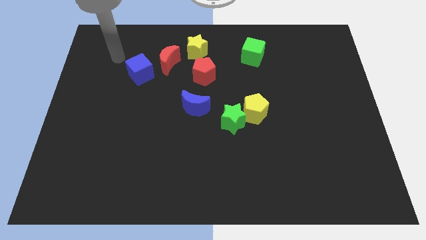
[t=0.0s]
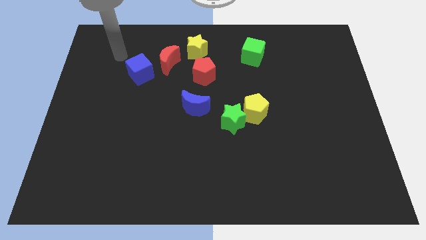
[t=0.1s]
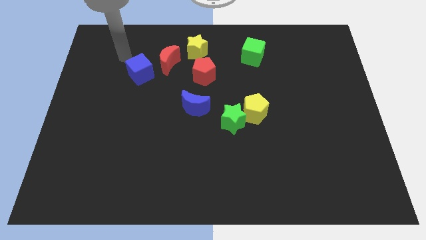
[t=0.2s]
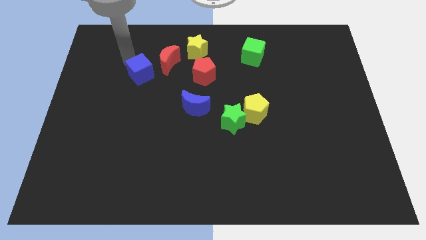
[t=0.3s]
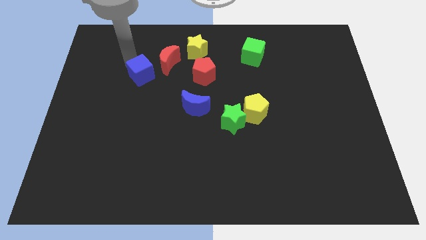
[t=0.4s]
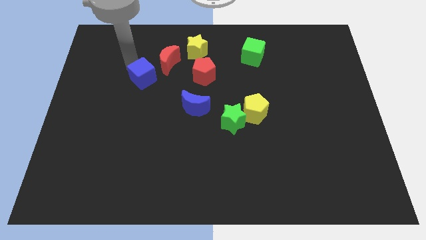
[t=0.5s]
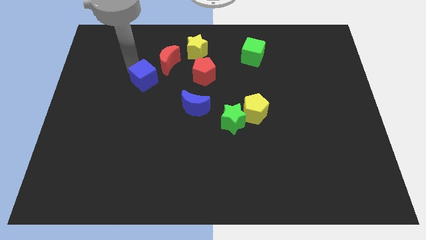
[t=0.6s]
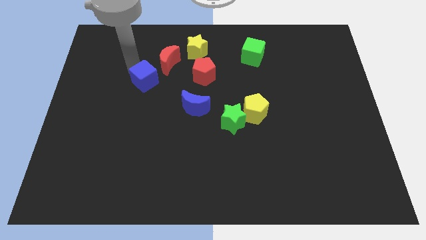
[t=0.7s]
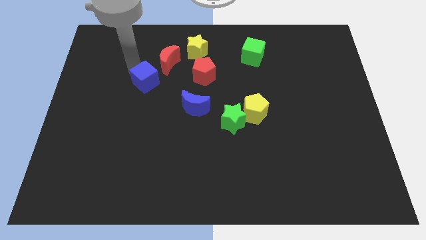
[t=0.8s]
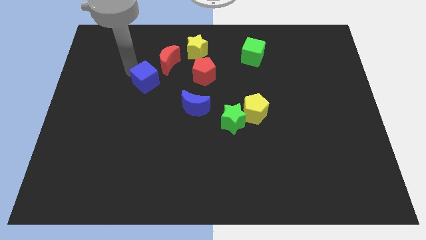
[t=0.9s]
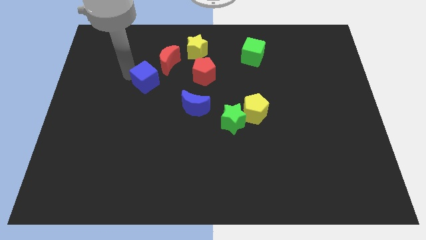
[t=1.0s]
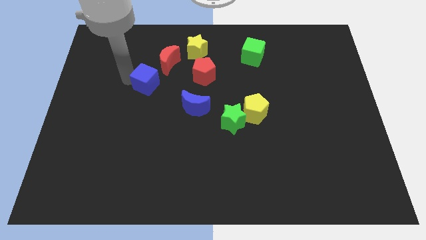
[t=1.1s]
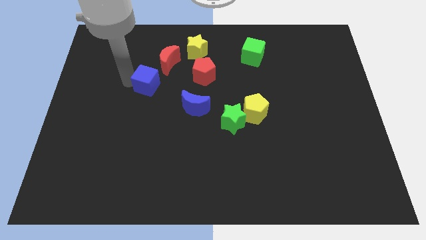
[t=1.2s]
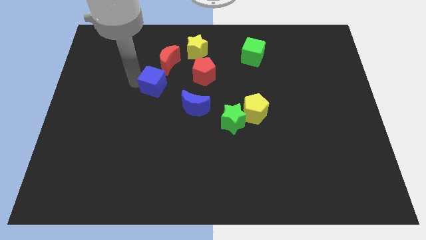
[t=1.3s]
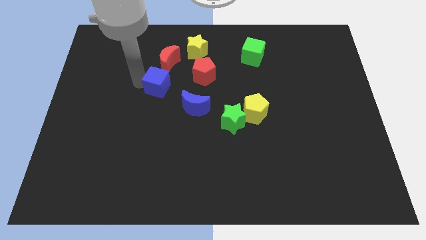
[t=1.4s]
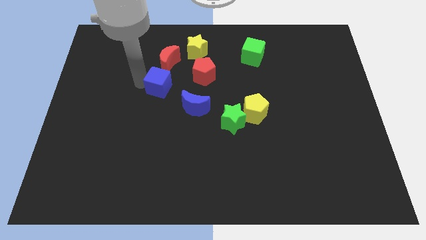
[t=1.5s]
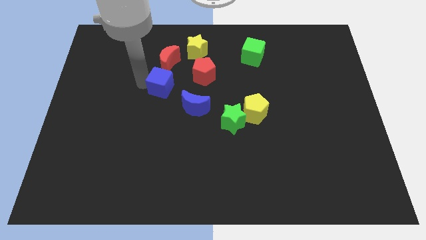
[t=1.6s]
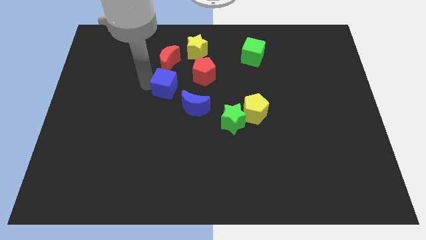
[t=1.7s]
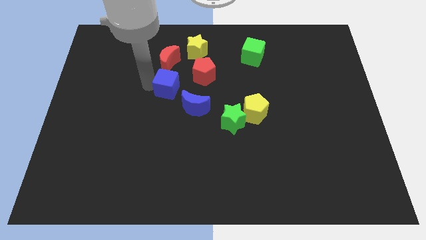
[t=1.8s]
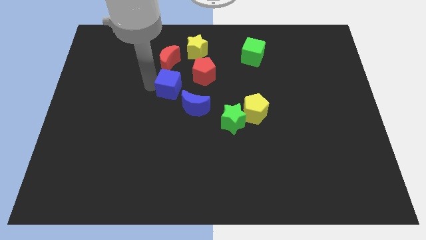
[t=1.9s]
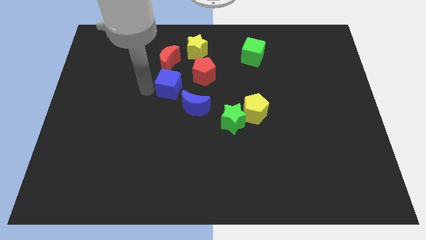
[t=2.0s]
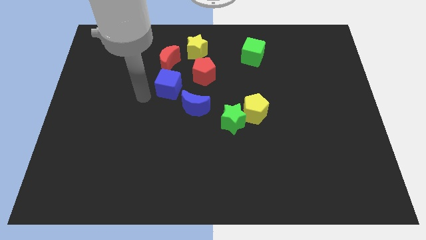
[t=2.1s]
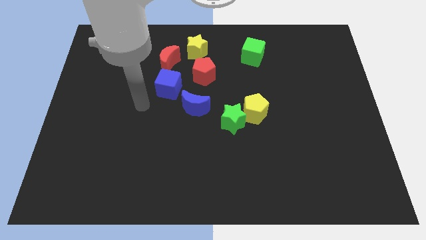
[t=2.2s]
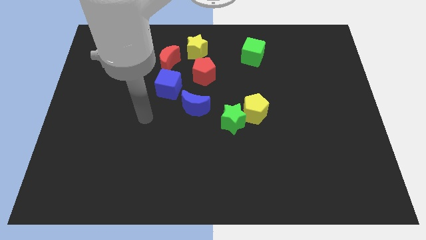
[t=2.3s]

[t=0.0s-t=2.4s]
place the blue cube below the red crescent

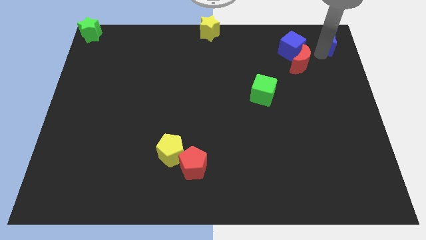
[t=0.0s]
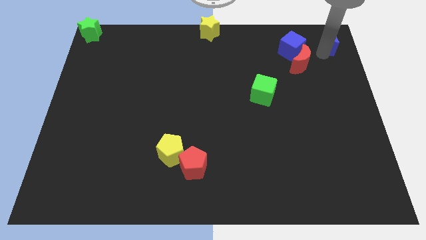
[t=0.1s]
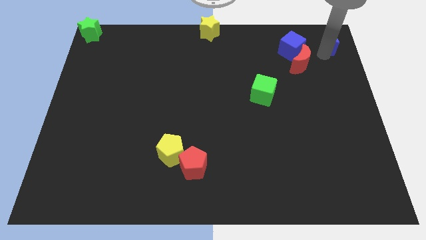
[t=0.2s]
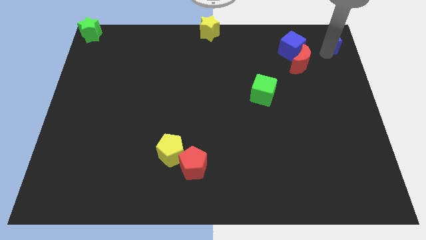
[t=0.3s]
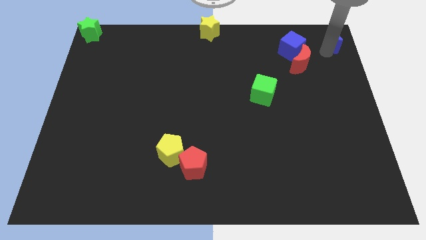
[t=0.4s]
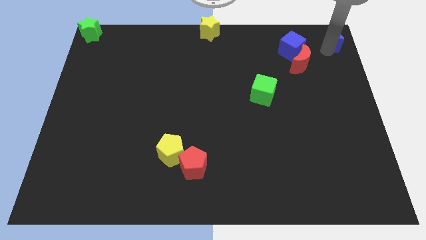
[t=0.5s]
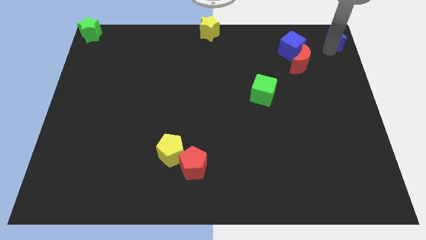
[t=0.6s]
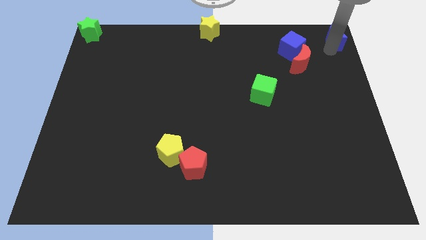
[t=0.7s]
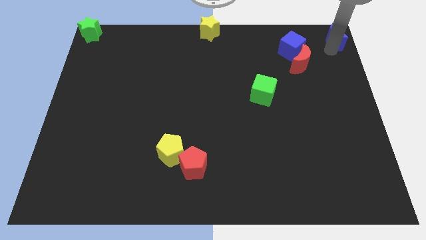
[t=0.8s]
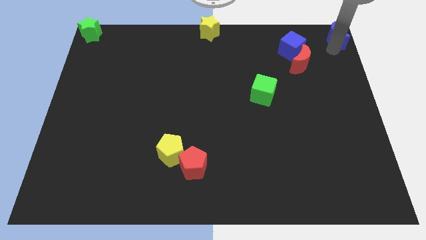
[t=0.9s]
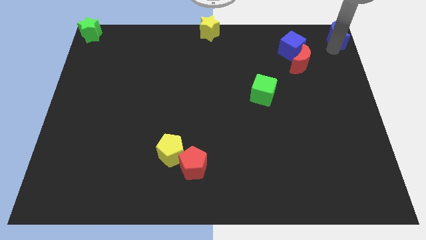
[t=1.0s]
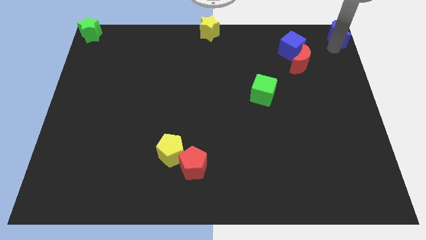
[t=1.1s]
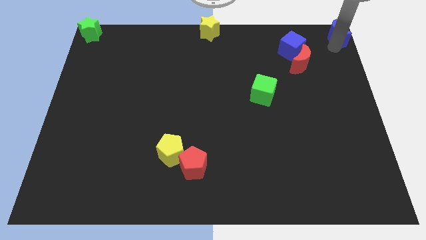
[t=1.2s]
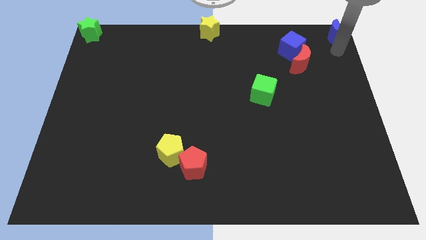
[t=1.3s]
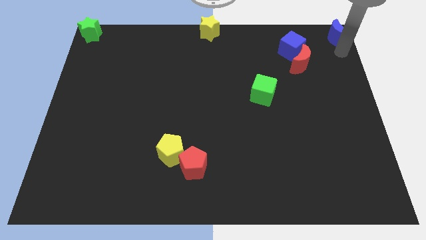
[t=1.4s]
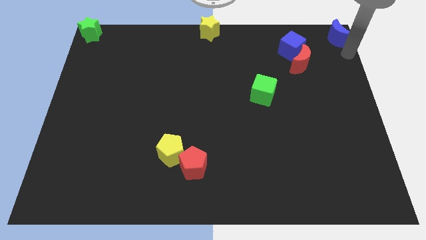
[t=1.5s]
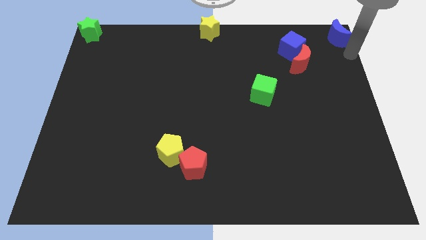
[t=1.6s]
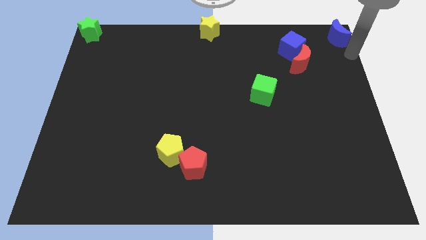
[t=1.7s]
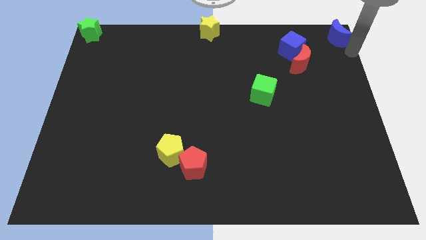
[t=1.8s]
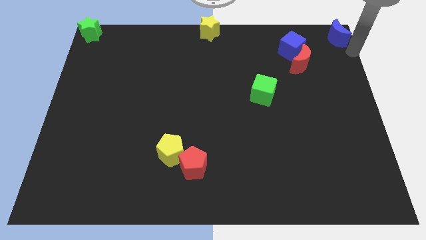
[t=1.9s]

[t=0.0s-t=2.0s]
move blue crescent at the top right corner

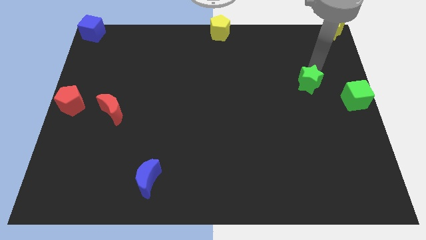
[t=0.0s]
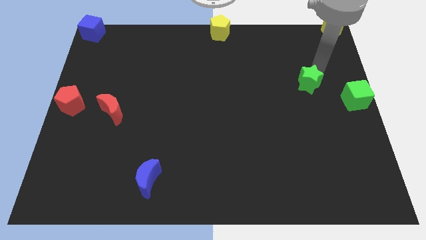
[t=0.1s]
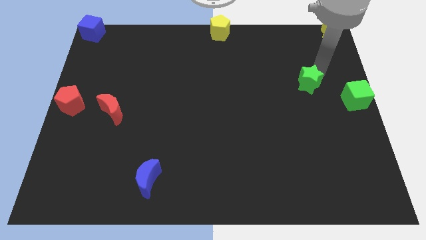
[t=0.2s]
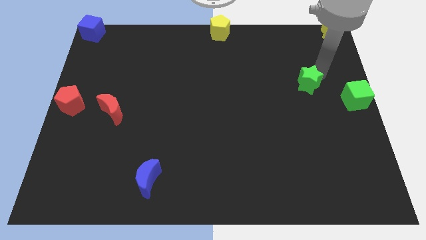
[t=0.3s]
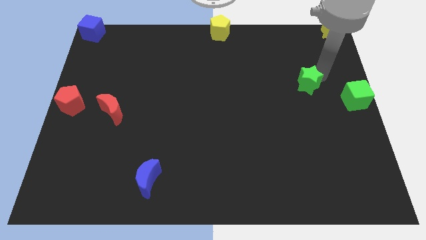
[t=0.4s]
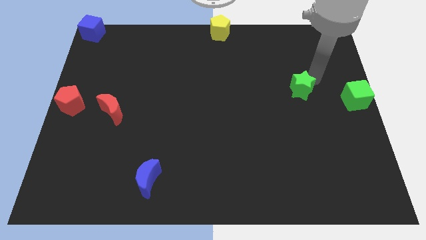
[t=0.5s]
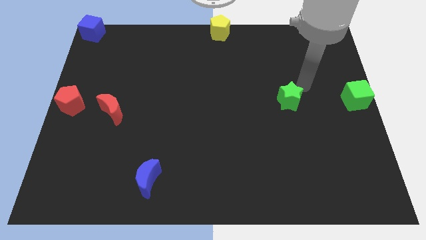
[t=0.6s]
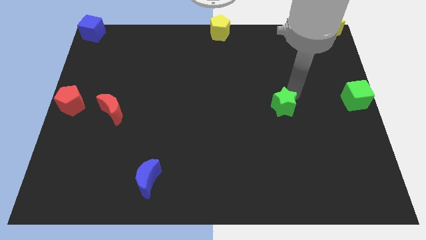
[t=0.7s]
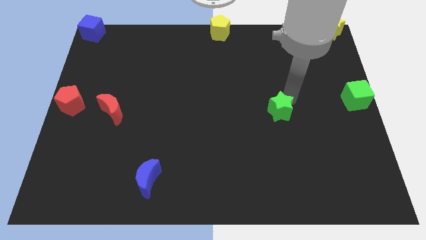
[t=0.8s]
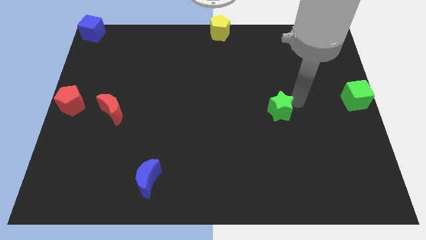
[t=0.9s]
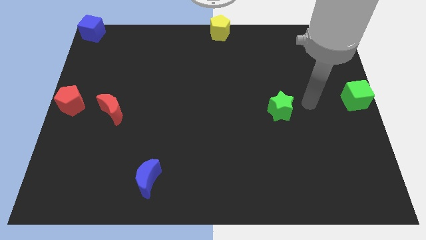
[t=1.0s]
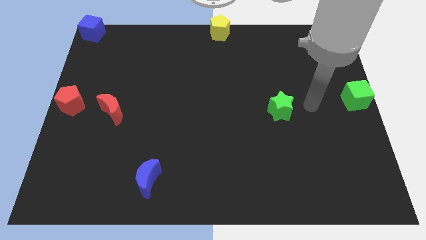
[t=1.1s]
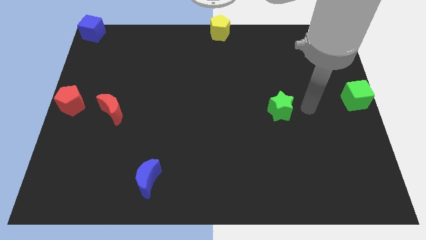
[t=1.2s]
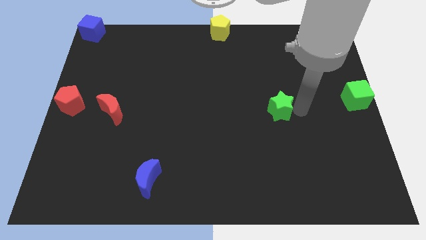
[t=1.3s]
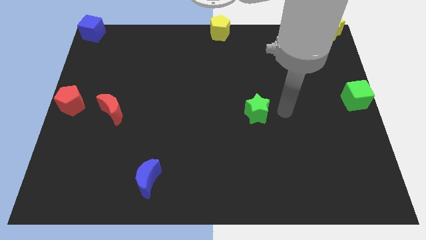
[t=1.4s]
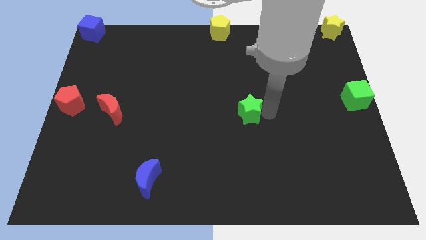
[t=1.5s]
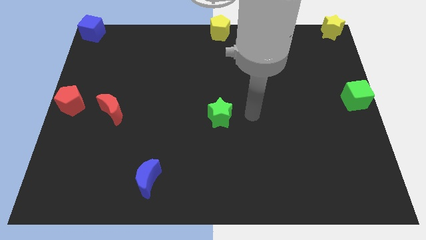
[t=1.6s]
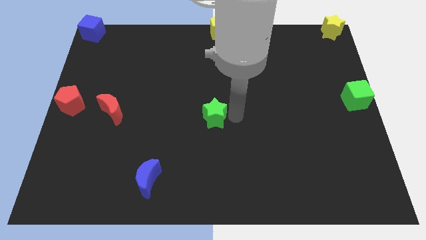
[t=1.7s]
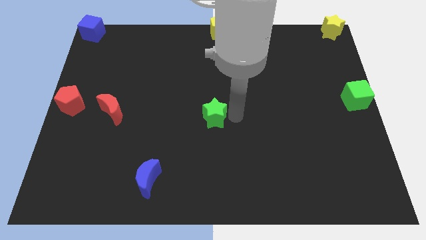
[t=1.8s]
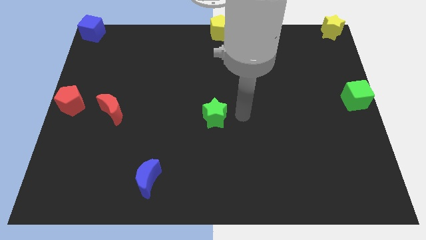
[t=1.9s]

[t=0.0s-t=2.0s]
place the green star at the center of the board

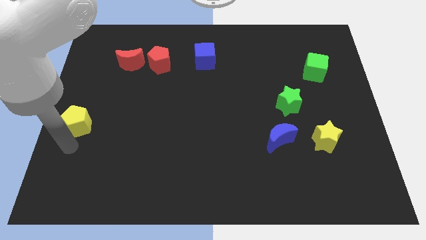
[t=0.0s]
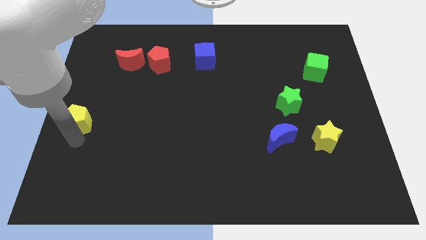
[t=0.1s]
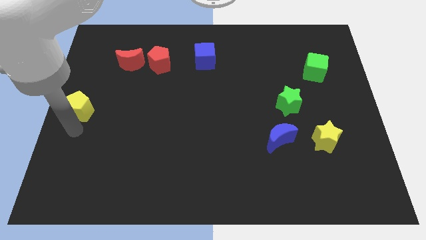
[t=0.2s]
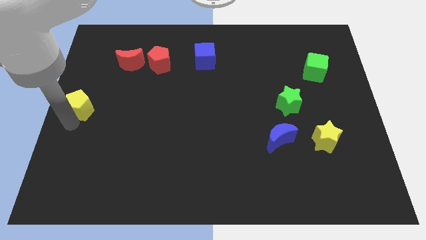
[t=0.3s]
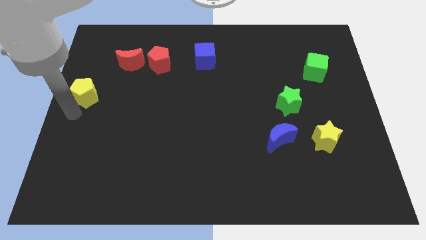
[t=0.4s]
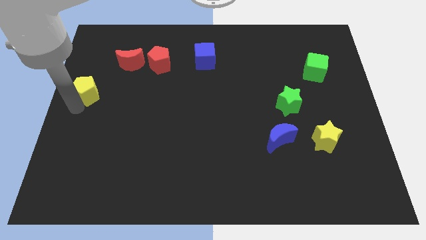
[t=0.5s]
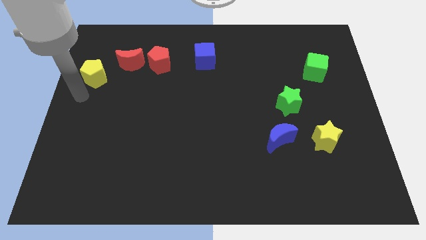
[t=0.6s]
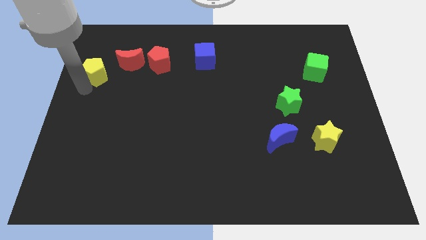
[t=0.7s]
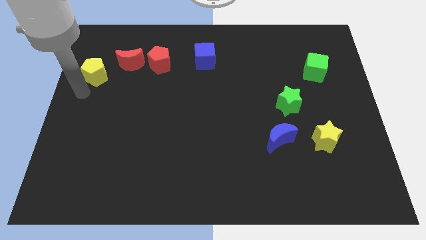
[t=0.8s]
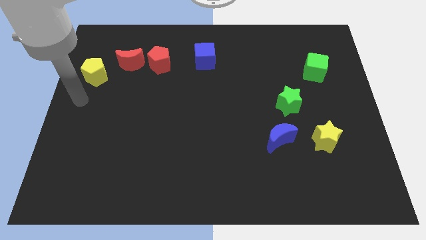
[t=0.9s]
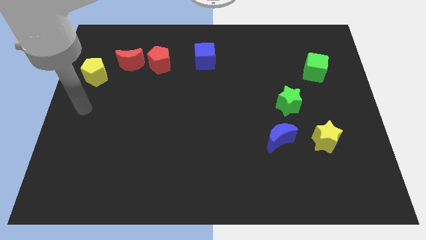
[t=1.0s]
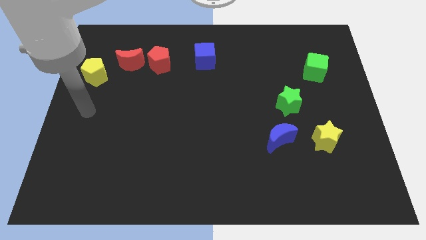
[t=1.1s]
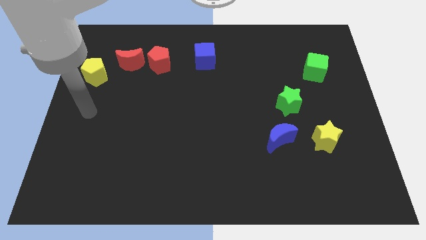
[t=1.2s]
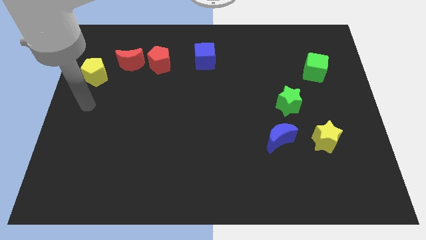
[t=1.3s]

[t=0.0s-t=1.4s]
slightly move the yellow pentagon towards the top

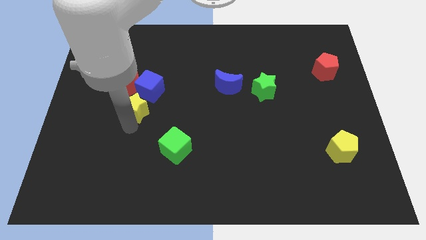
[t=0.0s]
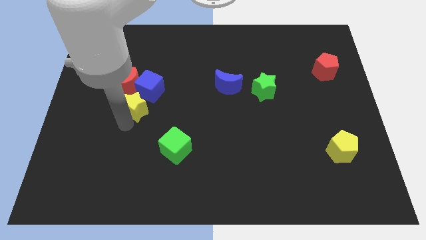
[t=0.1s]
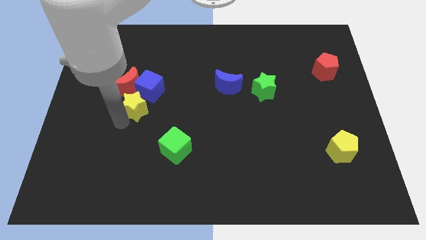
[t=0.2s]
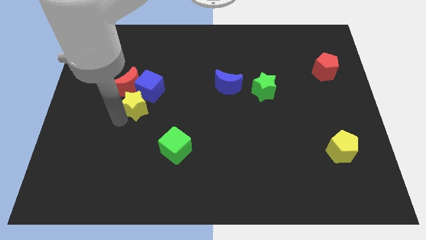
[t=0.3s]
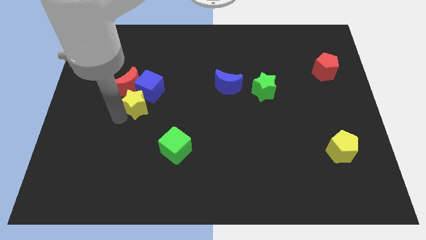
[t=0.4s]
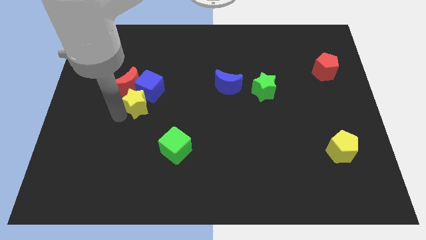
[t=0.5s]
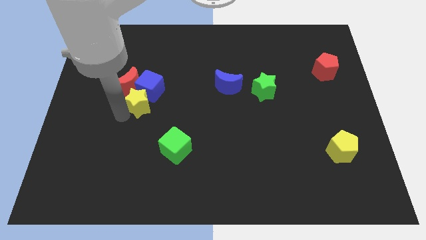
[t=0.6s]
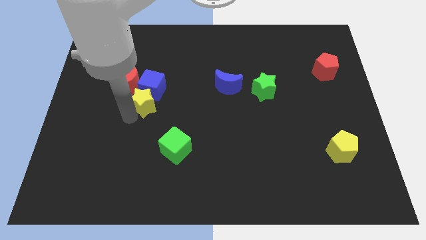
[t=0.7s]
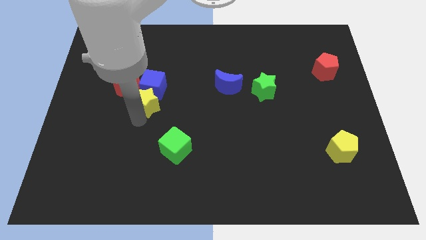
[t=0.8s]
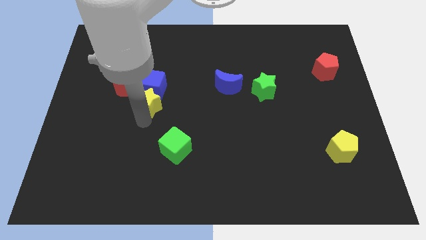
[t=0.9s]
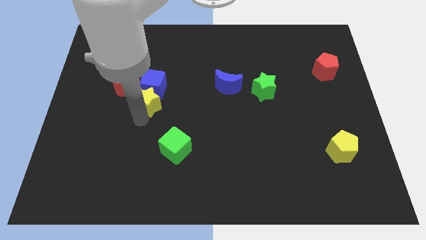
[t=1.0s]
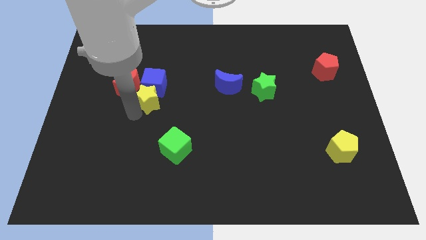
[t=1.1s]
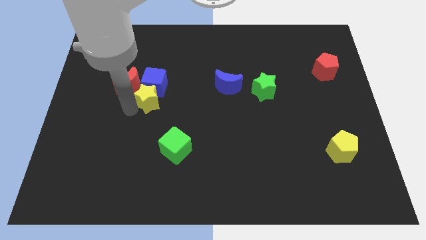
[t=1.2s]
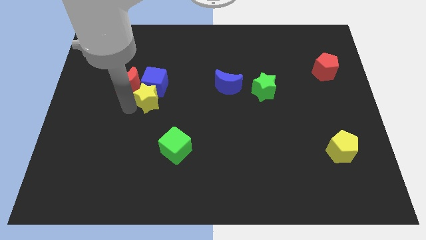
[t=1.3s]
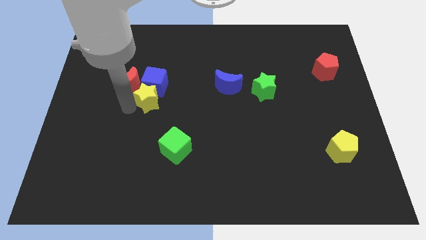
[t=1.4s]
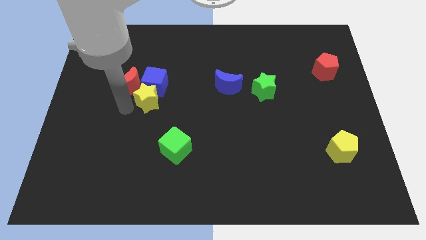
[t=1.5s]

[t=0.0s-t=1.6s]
put the yellow star at the bottom of the blue cube
